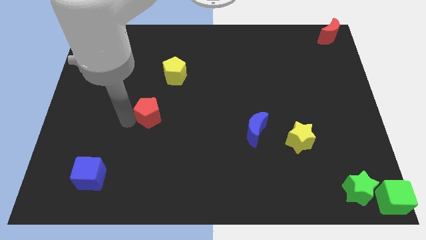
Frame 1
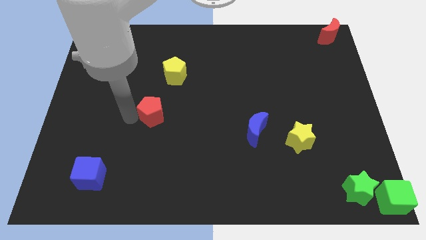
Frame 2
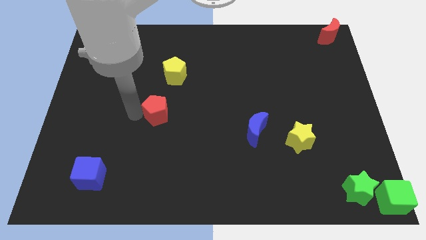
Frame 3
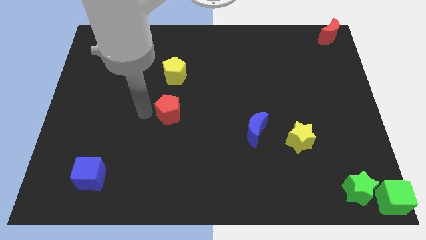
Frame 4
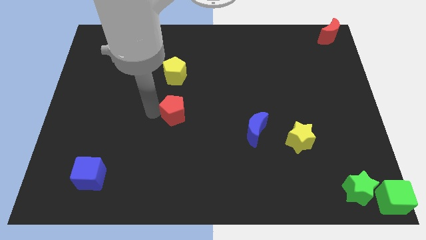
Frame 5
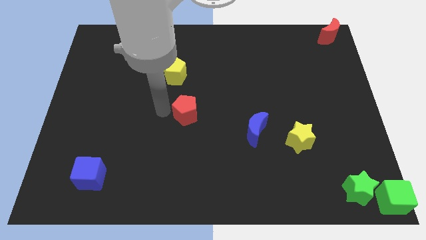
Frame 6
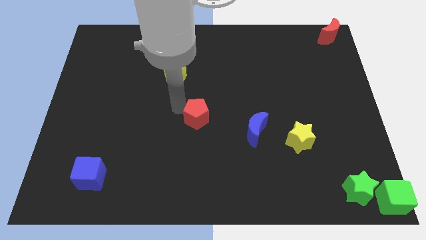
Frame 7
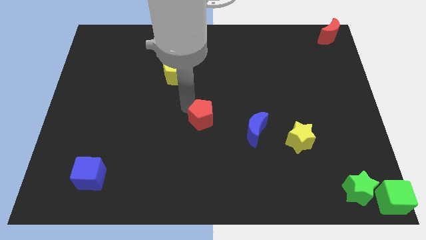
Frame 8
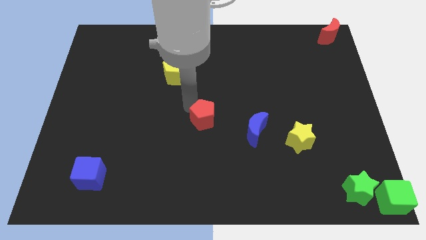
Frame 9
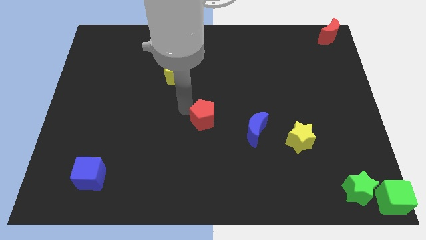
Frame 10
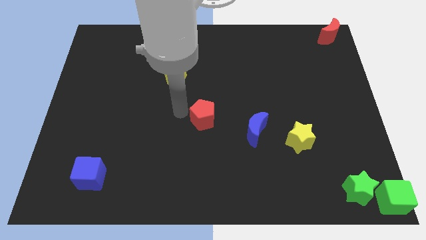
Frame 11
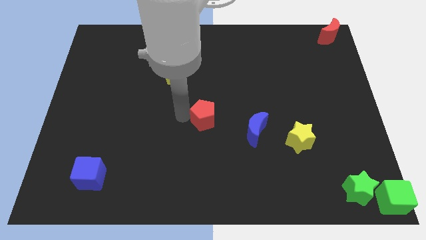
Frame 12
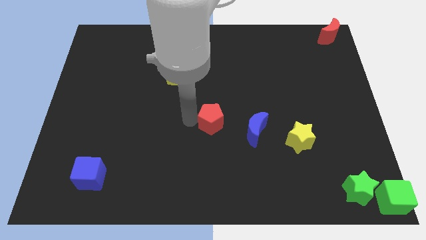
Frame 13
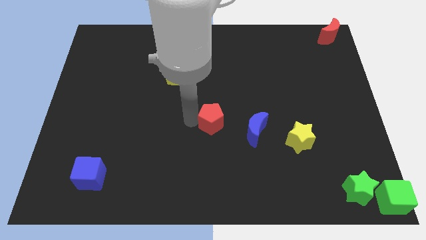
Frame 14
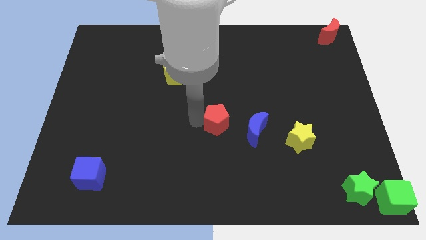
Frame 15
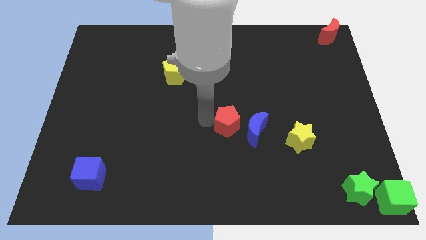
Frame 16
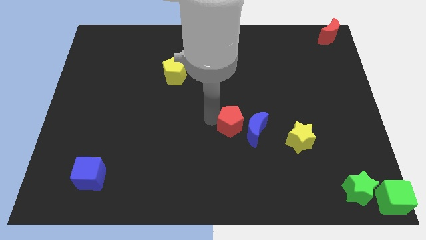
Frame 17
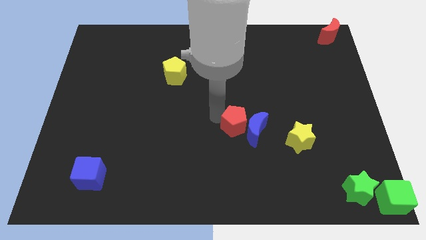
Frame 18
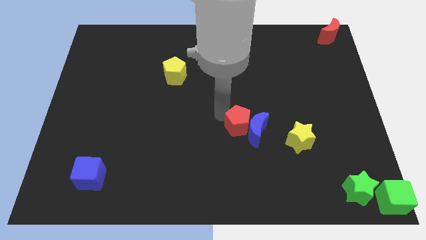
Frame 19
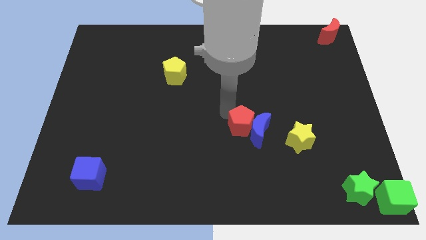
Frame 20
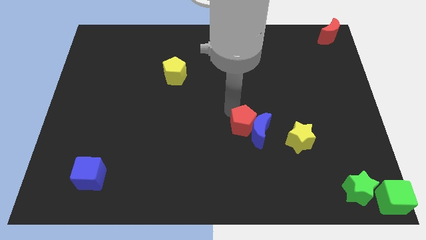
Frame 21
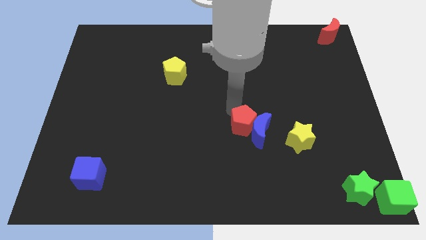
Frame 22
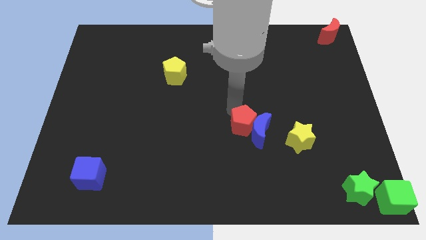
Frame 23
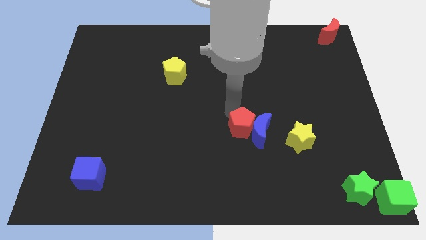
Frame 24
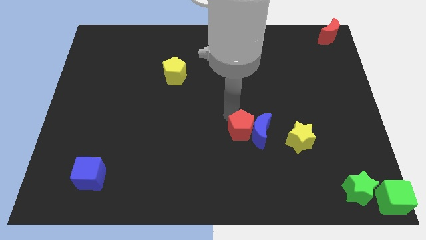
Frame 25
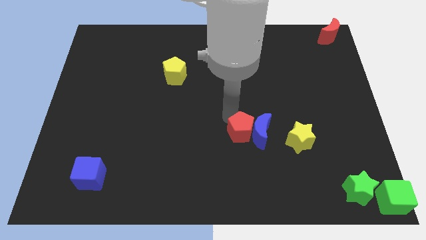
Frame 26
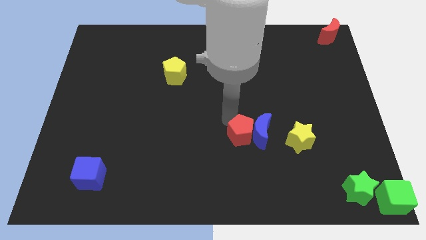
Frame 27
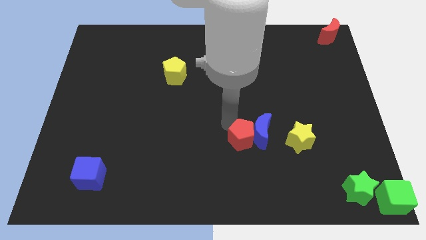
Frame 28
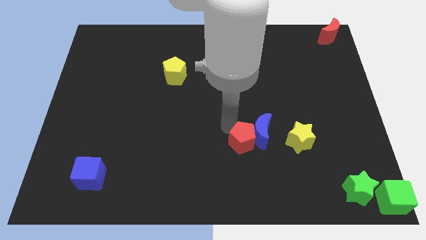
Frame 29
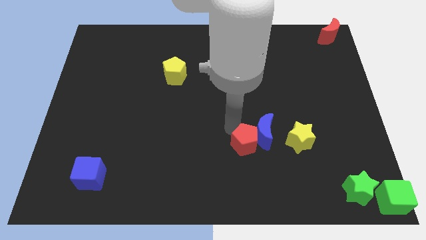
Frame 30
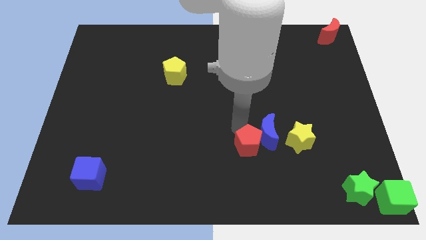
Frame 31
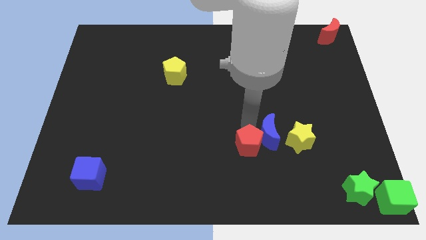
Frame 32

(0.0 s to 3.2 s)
move red pentagon into blue moon

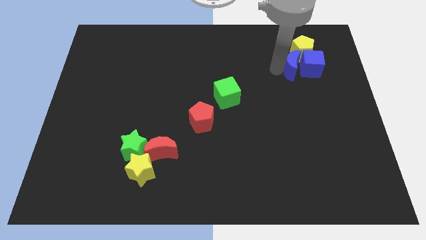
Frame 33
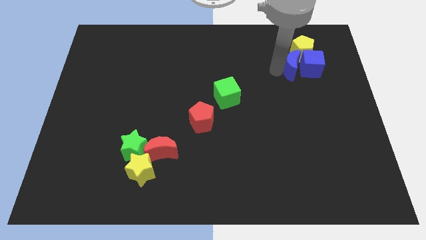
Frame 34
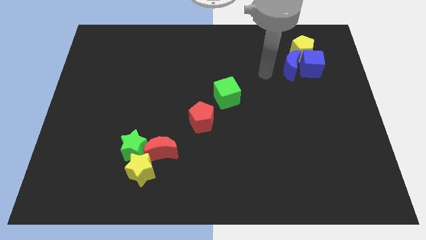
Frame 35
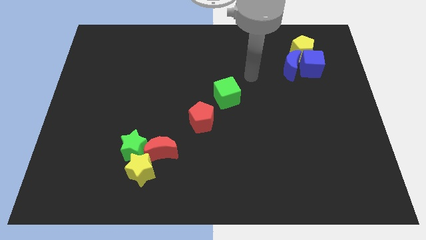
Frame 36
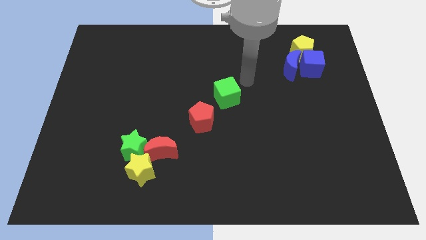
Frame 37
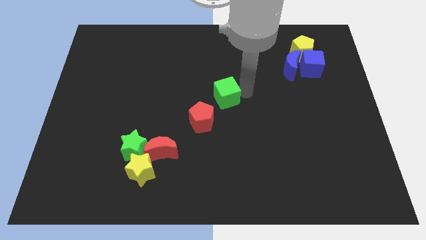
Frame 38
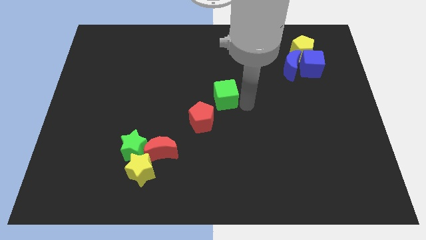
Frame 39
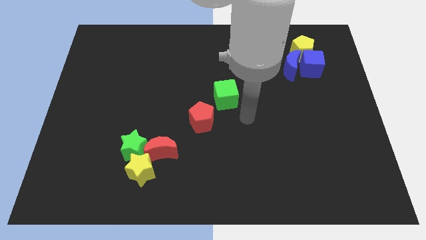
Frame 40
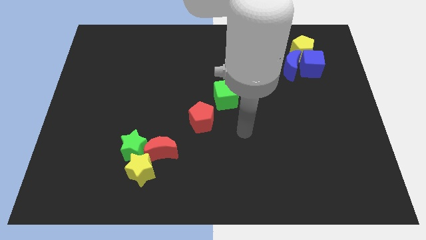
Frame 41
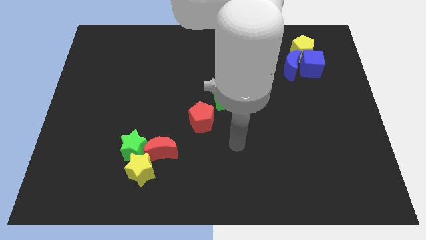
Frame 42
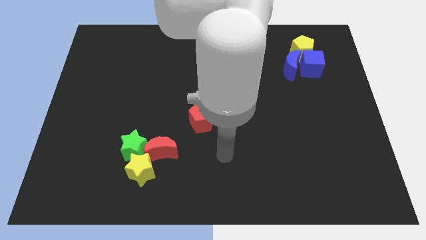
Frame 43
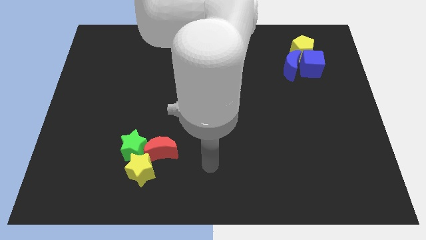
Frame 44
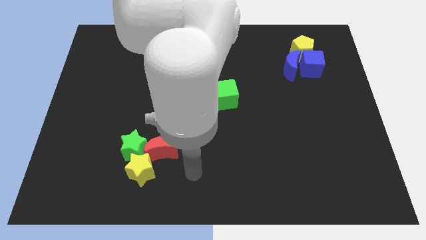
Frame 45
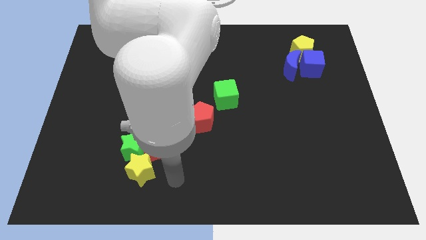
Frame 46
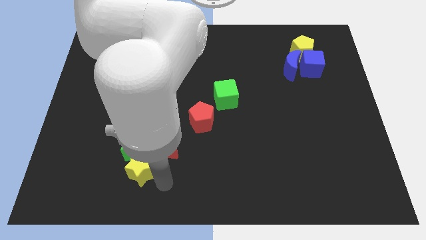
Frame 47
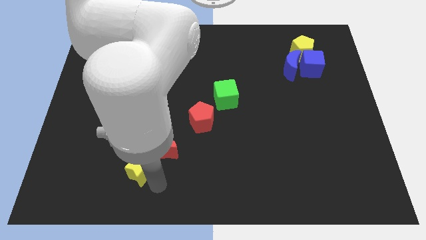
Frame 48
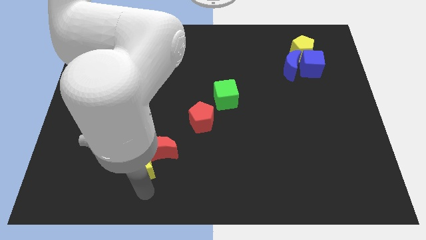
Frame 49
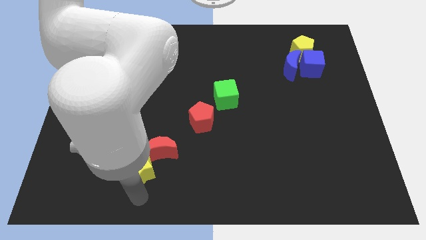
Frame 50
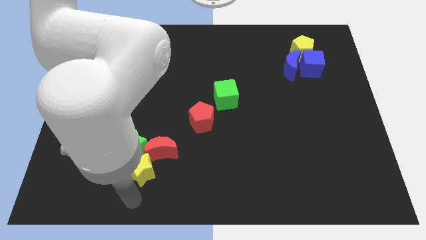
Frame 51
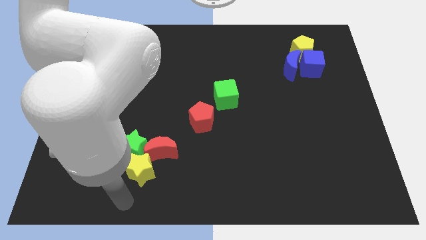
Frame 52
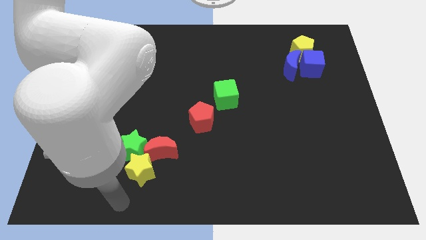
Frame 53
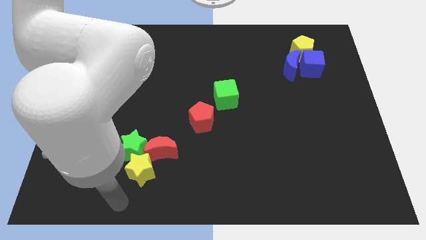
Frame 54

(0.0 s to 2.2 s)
slightly touch the green cube and move away

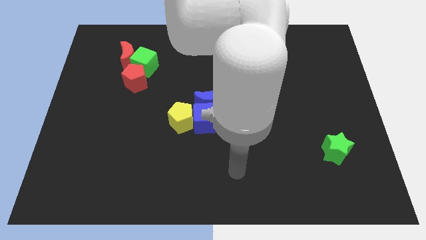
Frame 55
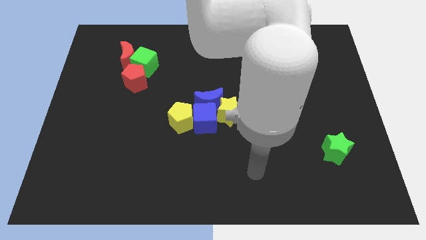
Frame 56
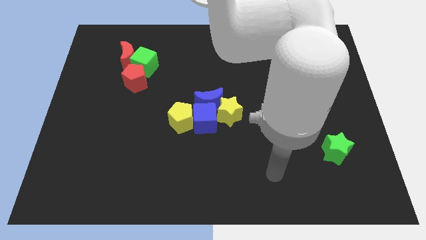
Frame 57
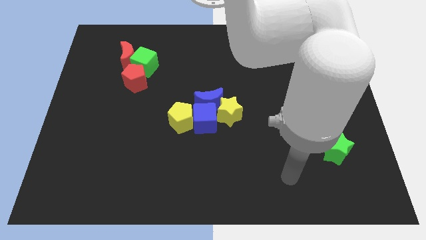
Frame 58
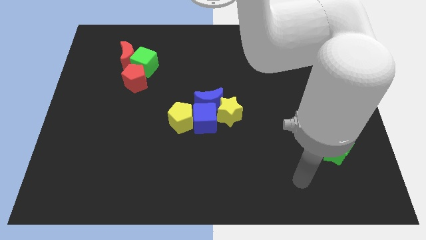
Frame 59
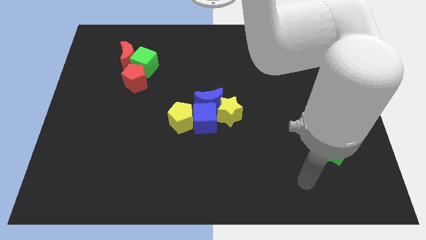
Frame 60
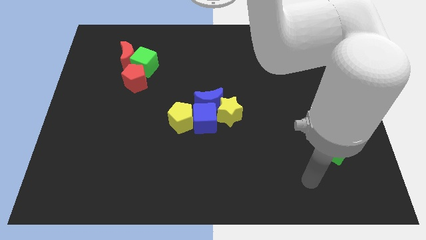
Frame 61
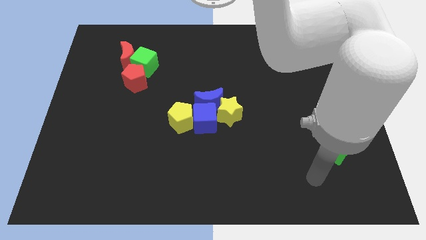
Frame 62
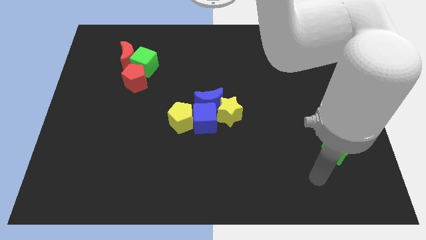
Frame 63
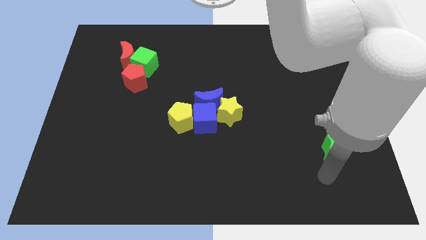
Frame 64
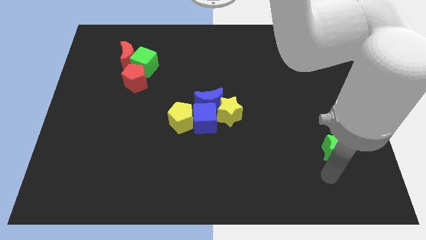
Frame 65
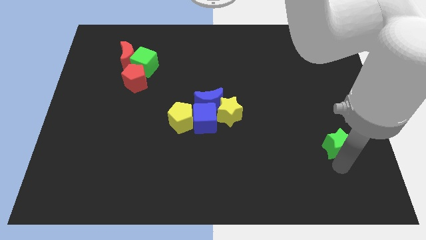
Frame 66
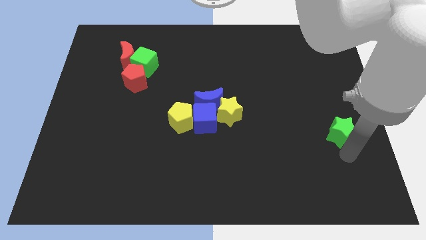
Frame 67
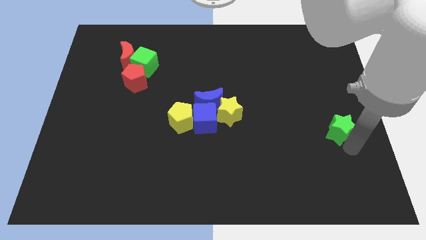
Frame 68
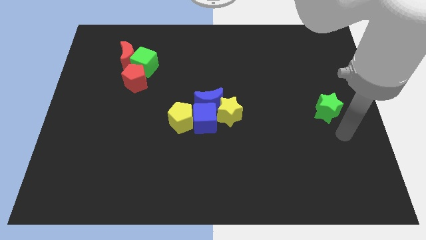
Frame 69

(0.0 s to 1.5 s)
place the green star to the right of the yellow star

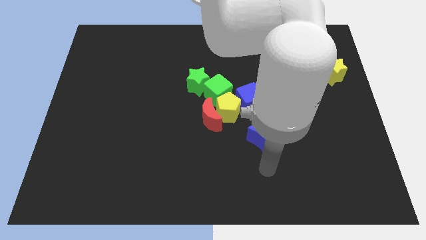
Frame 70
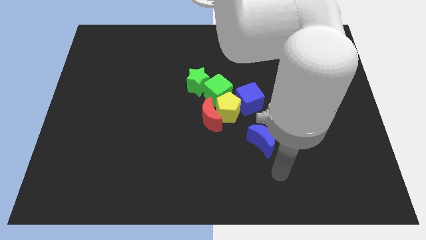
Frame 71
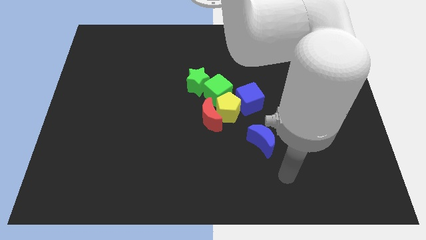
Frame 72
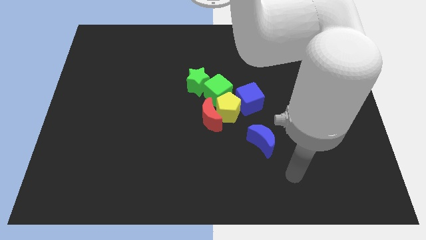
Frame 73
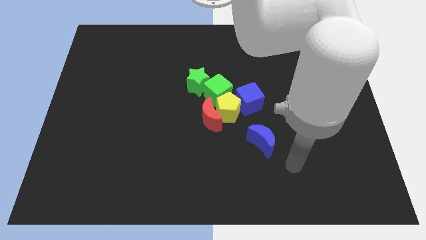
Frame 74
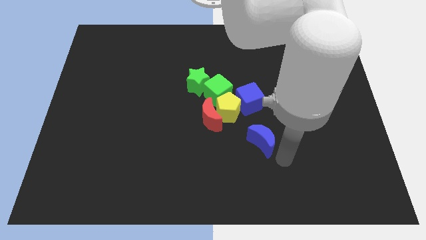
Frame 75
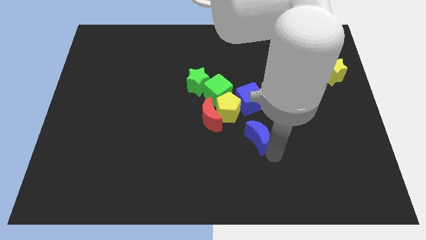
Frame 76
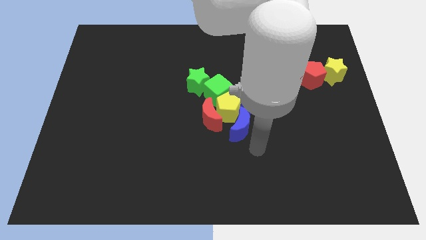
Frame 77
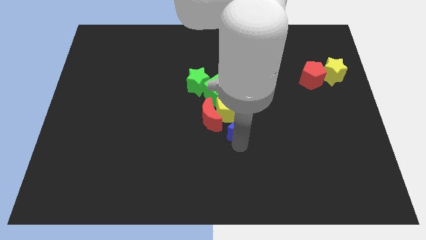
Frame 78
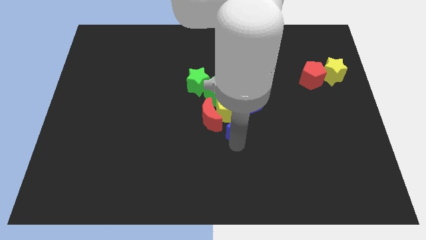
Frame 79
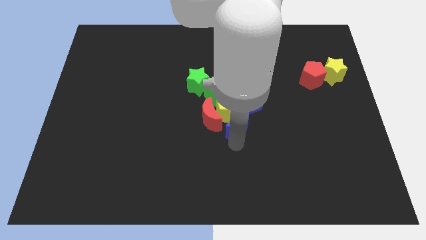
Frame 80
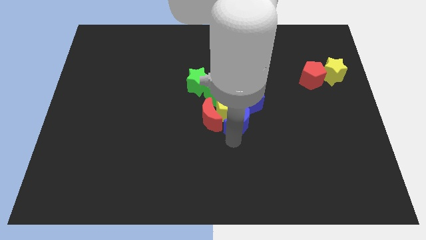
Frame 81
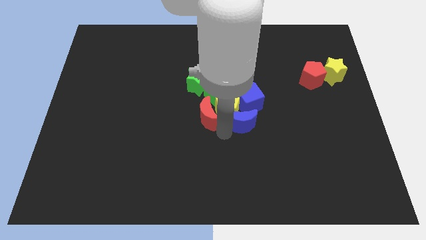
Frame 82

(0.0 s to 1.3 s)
move the blue crescent to the bottom of the yellow pentagon

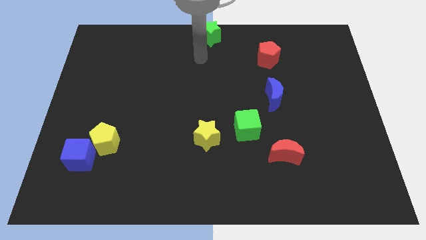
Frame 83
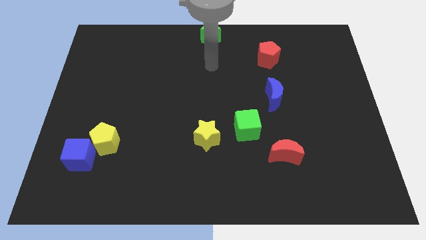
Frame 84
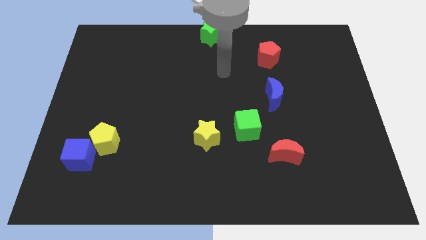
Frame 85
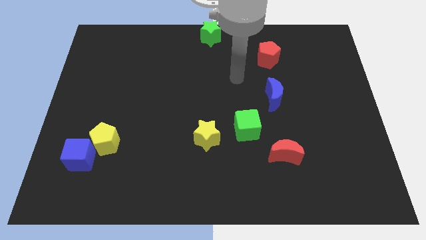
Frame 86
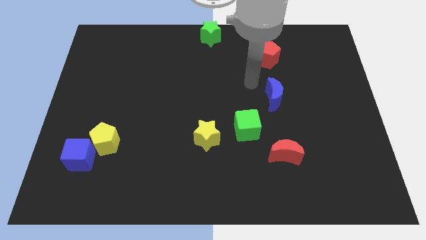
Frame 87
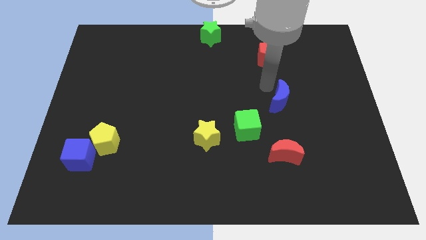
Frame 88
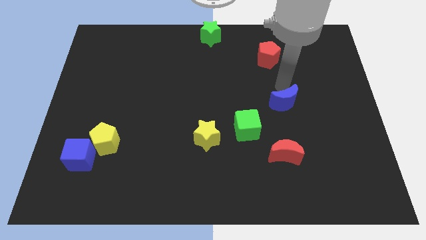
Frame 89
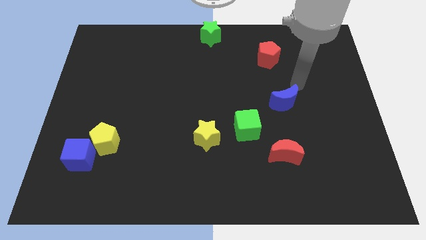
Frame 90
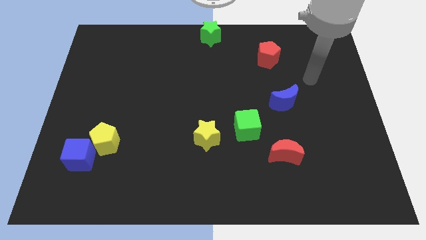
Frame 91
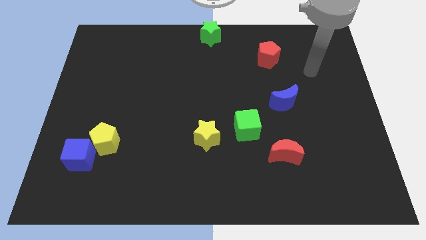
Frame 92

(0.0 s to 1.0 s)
go and tap the blue crescent
